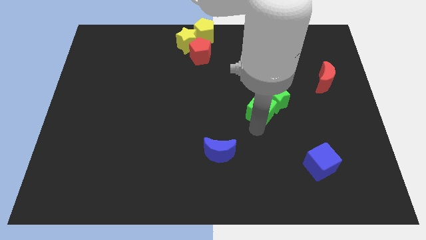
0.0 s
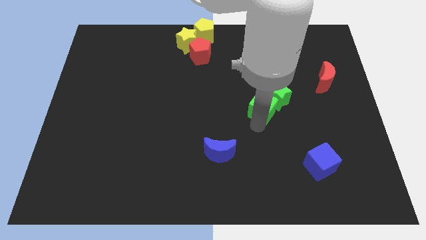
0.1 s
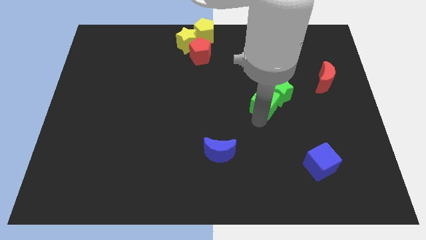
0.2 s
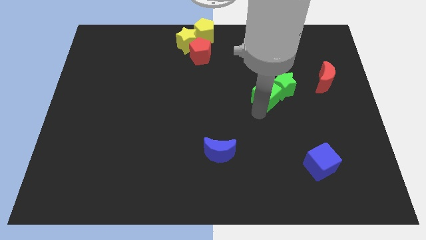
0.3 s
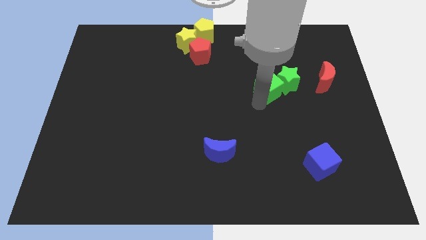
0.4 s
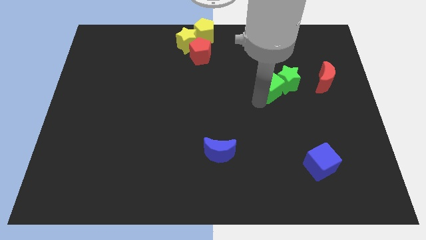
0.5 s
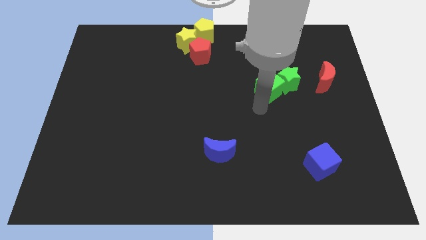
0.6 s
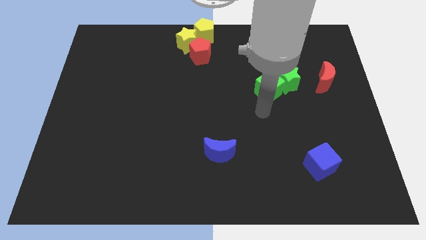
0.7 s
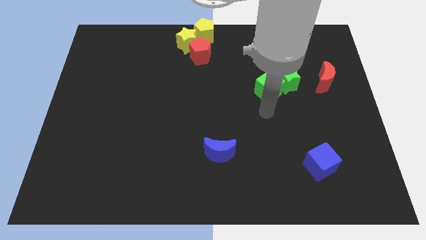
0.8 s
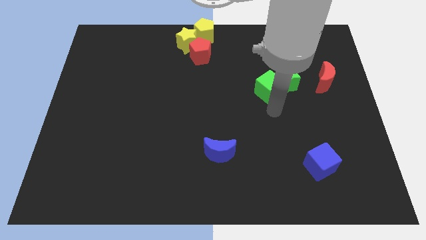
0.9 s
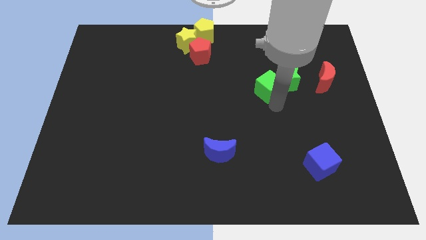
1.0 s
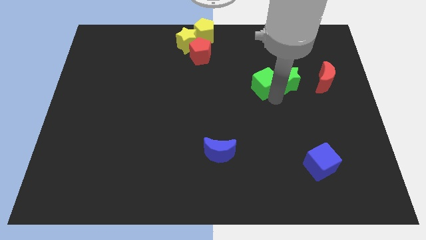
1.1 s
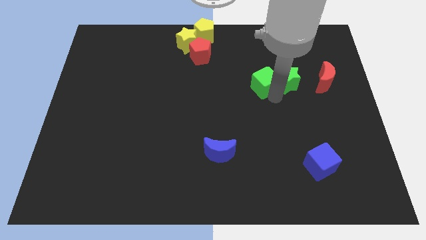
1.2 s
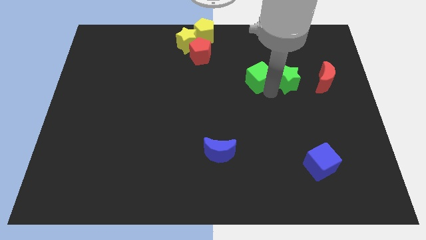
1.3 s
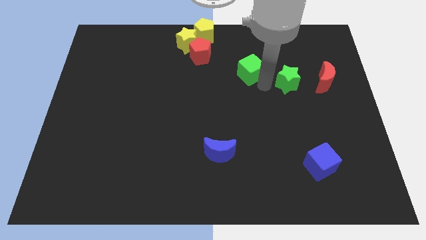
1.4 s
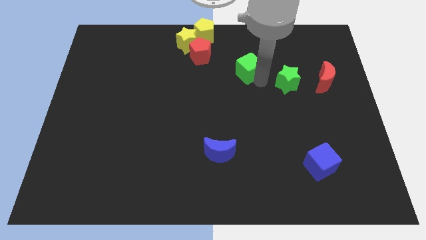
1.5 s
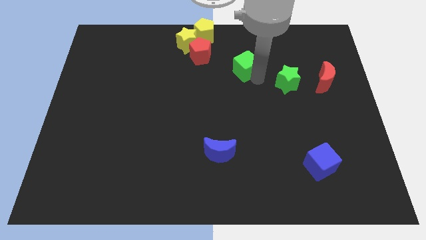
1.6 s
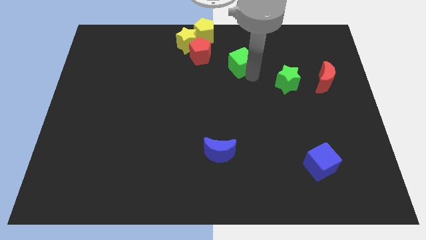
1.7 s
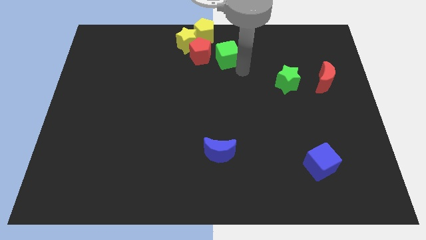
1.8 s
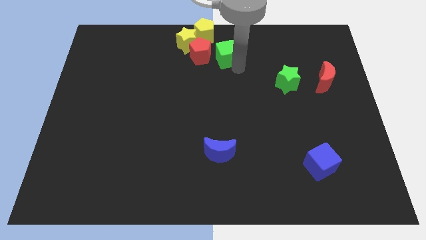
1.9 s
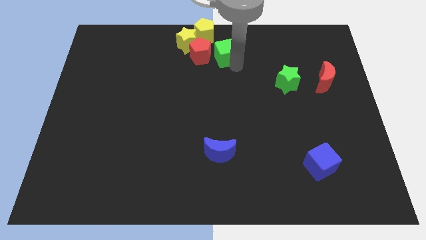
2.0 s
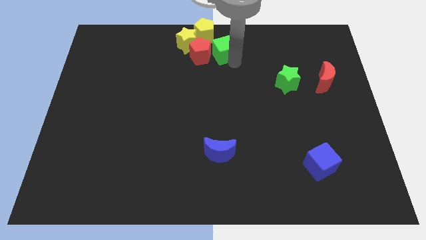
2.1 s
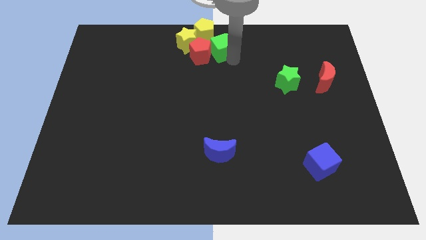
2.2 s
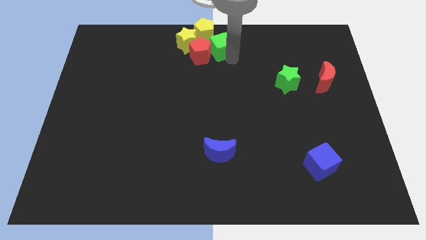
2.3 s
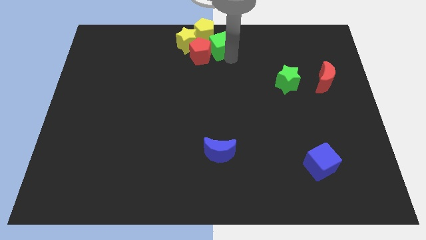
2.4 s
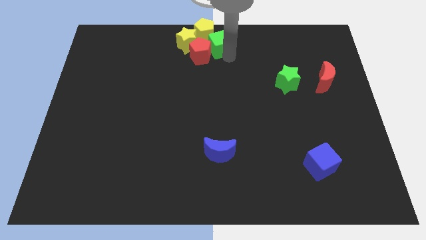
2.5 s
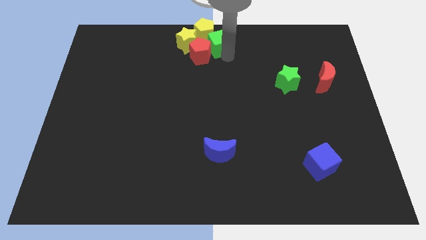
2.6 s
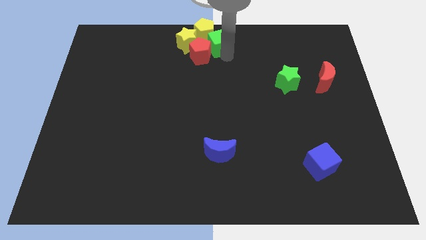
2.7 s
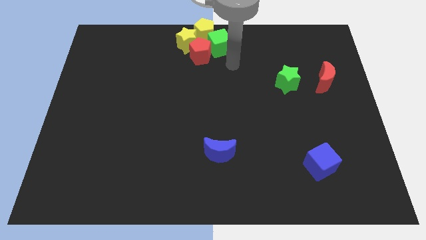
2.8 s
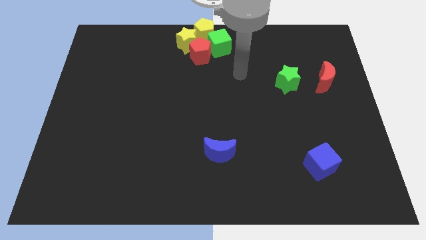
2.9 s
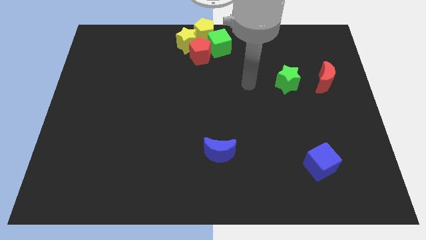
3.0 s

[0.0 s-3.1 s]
move green cube towards yellow pentagon

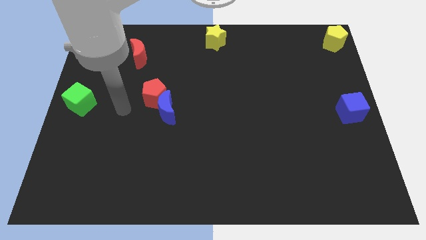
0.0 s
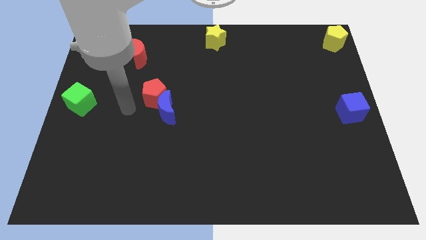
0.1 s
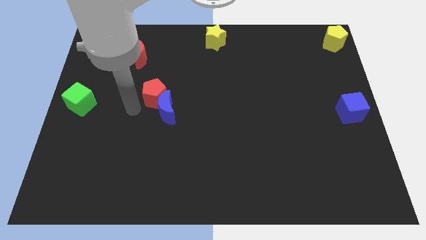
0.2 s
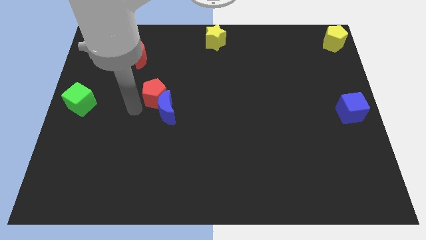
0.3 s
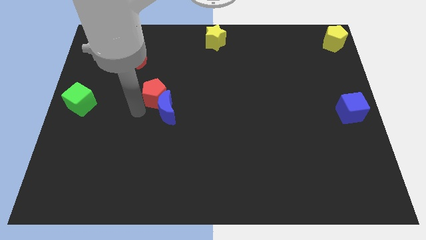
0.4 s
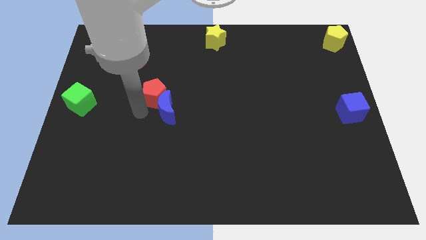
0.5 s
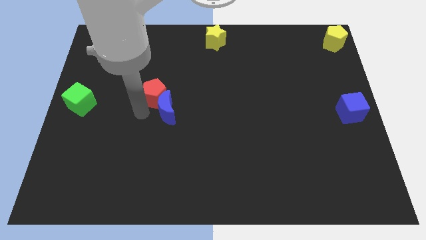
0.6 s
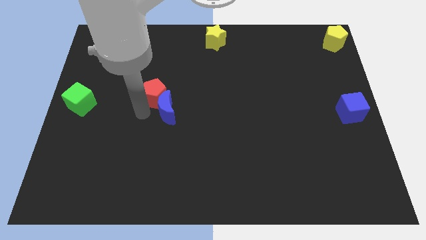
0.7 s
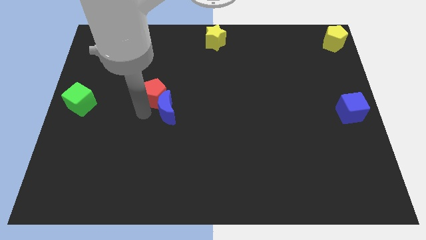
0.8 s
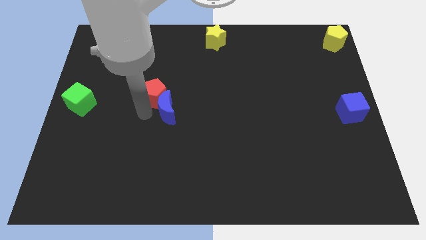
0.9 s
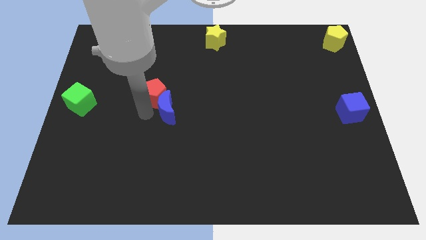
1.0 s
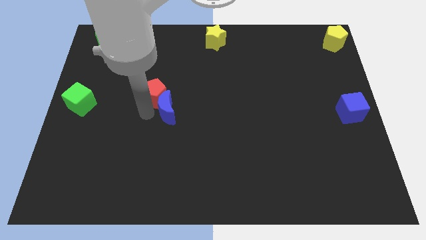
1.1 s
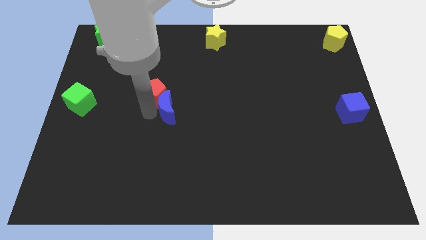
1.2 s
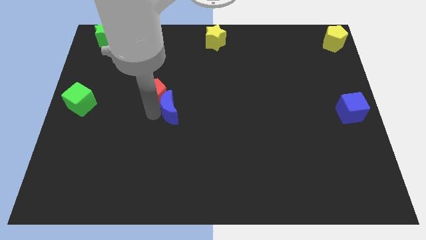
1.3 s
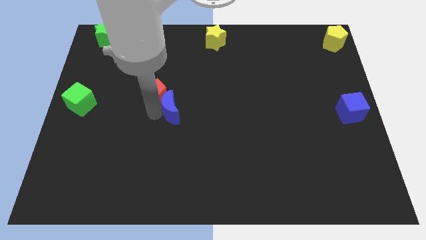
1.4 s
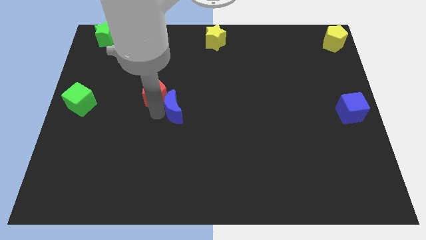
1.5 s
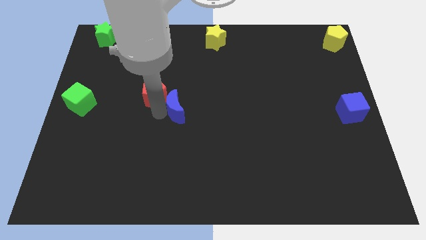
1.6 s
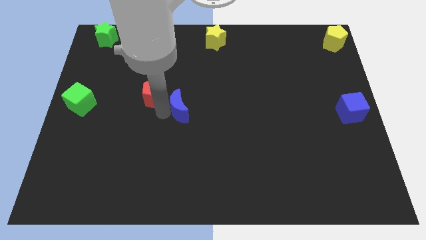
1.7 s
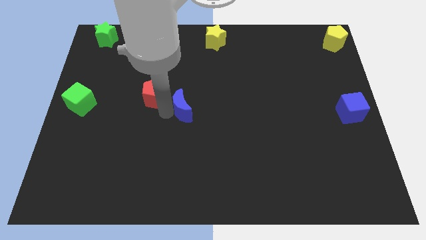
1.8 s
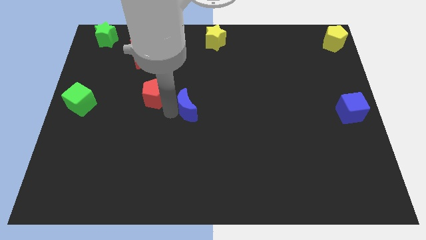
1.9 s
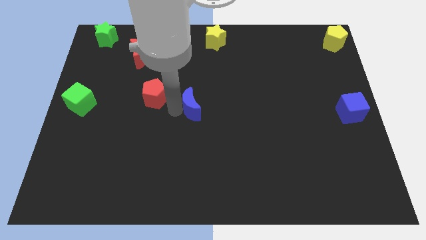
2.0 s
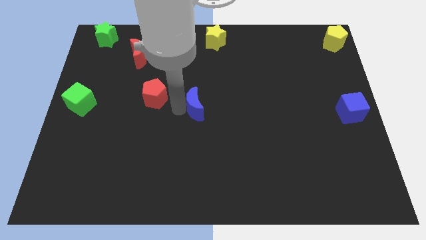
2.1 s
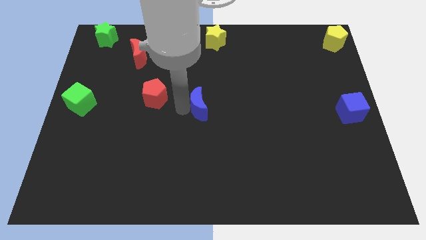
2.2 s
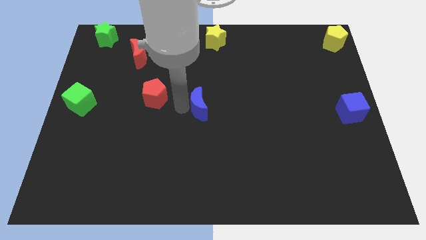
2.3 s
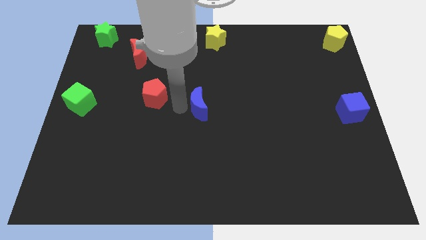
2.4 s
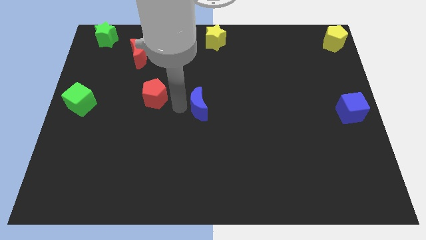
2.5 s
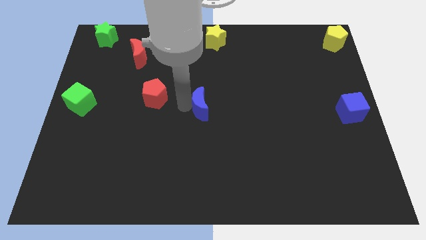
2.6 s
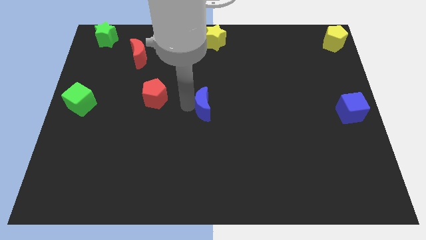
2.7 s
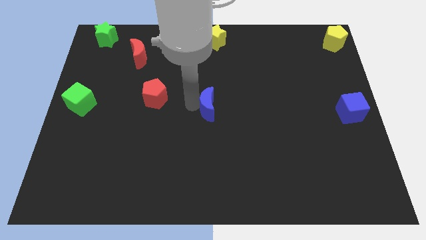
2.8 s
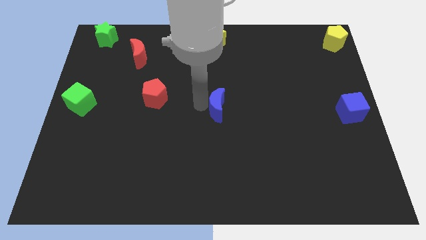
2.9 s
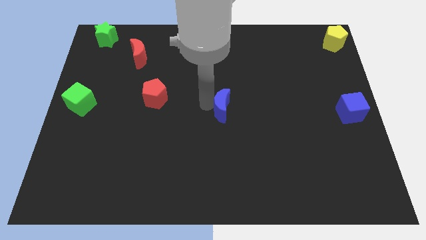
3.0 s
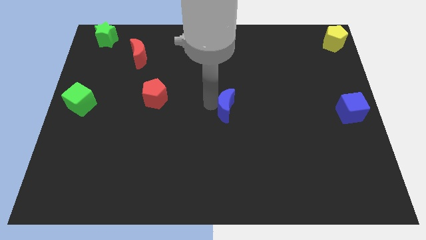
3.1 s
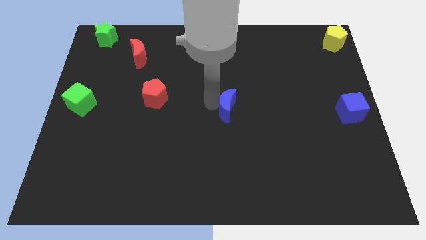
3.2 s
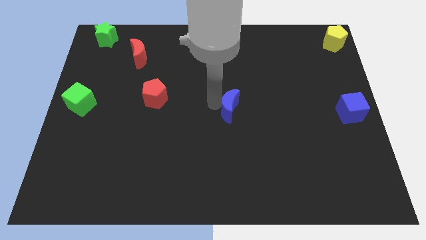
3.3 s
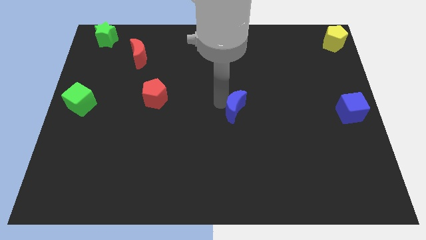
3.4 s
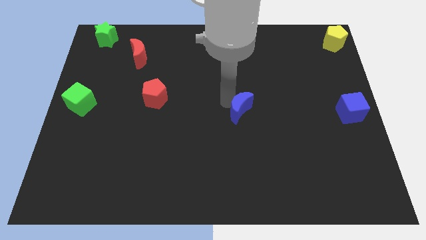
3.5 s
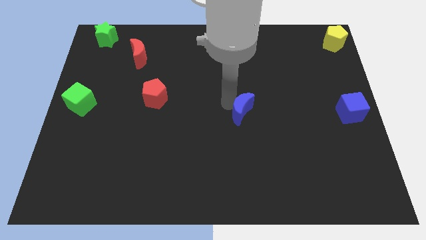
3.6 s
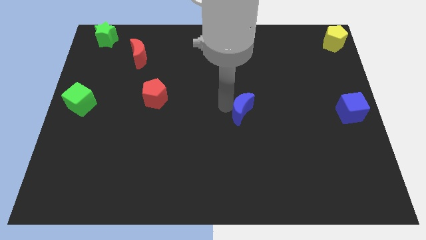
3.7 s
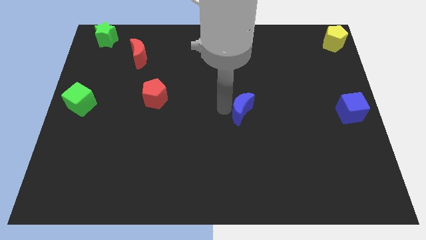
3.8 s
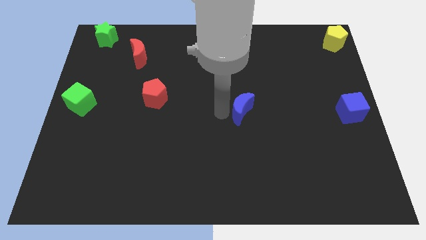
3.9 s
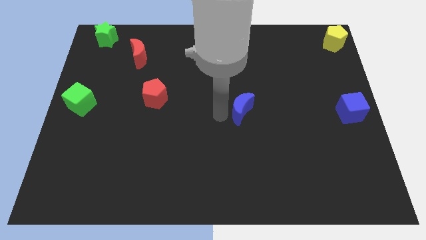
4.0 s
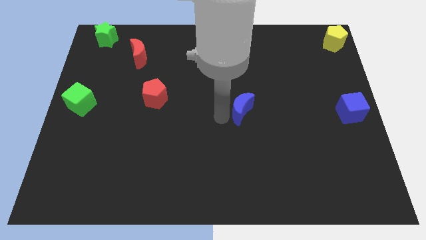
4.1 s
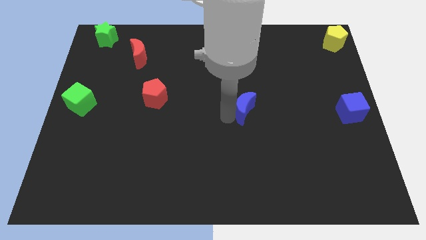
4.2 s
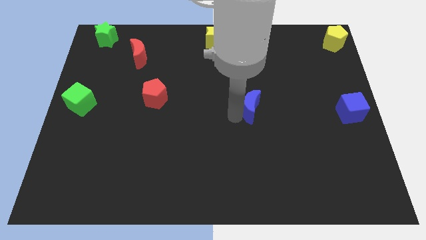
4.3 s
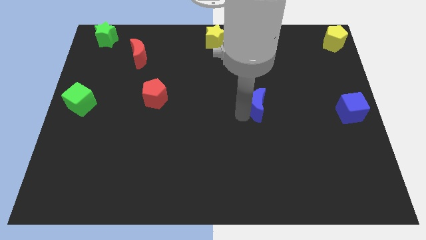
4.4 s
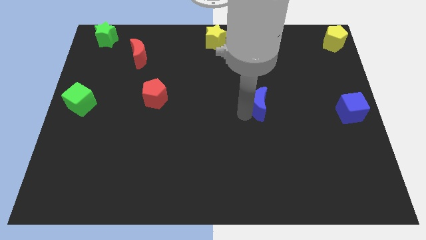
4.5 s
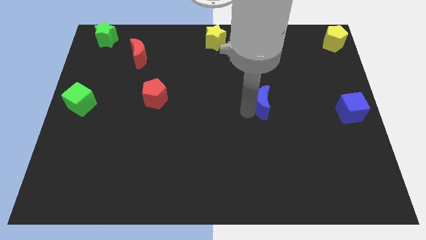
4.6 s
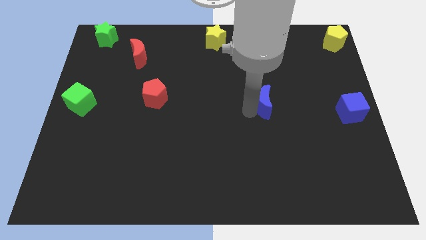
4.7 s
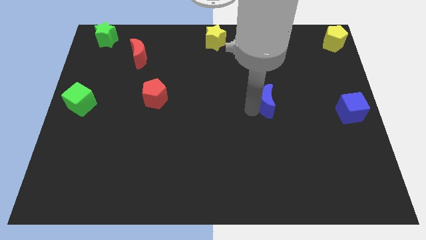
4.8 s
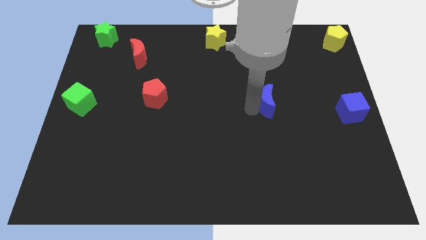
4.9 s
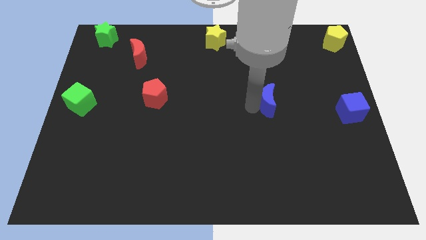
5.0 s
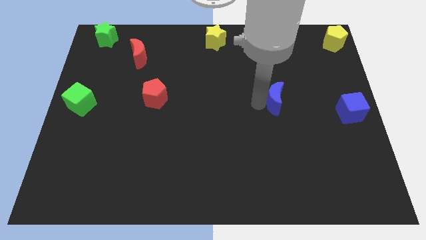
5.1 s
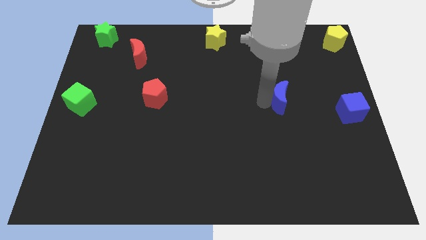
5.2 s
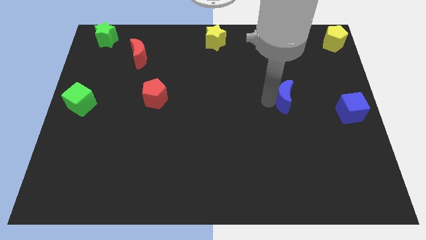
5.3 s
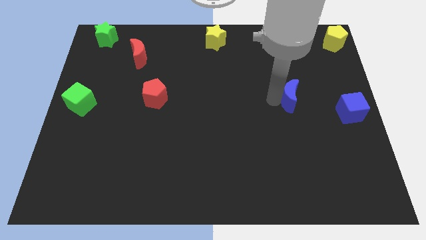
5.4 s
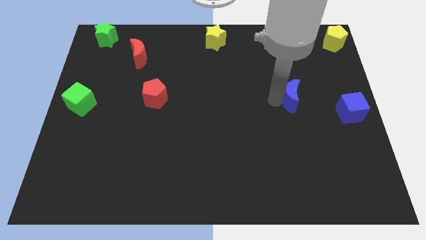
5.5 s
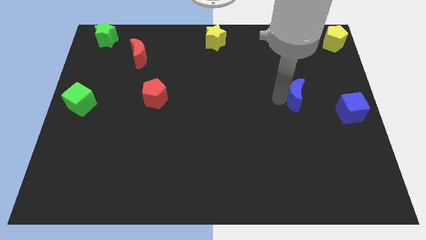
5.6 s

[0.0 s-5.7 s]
place the blue crescent diagonally below the yellow pentagon

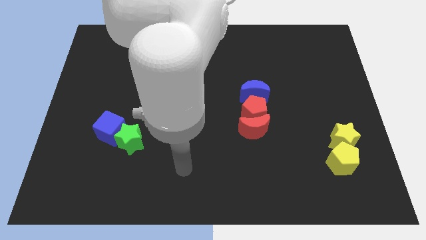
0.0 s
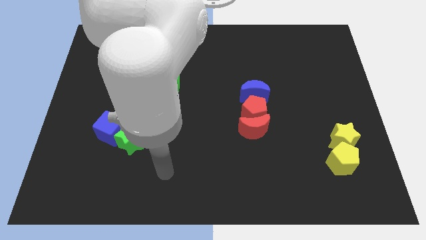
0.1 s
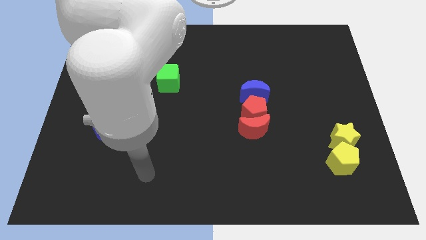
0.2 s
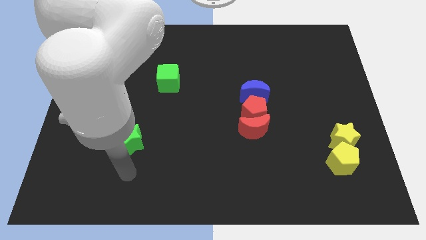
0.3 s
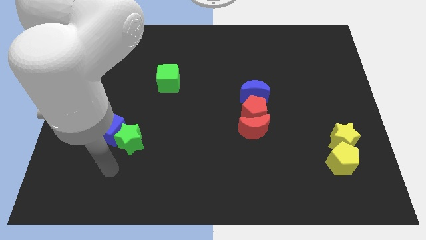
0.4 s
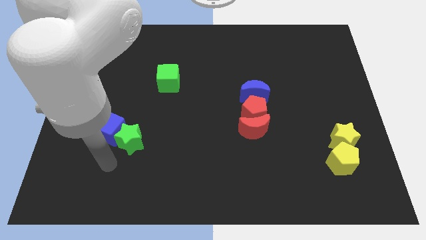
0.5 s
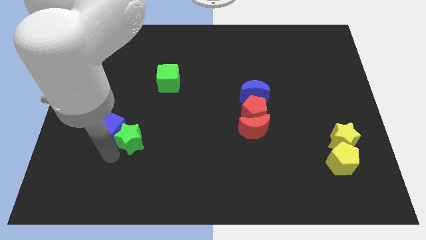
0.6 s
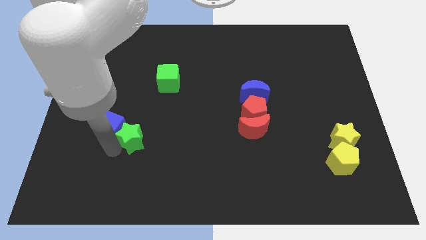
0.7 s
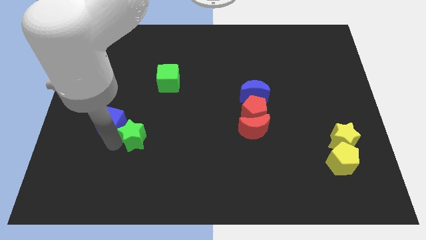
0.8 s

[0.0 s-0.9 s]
place your arm below green star
